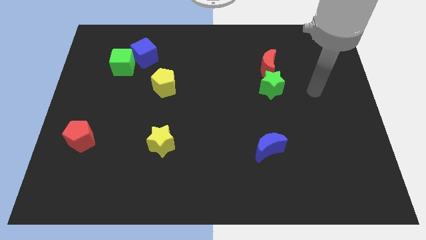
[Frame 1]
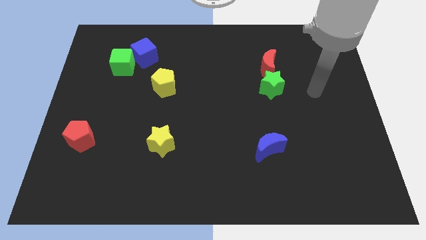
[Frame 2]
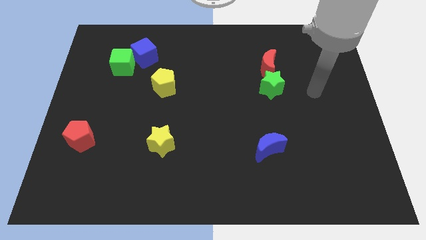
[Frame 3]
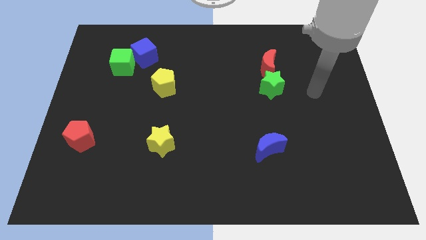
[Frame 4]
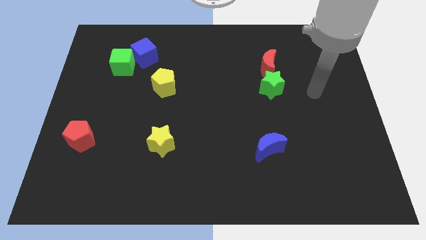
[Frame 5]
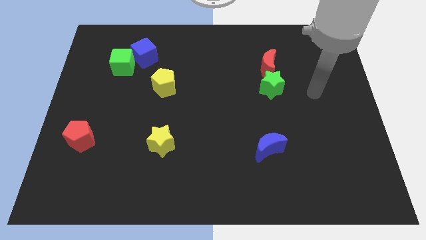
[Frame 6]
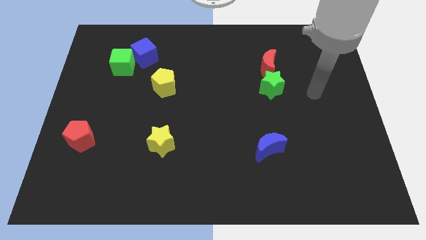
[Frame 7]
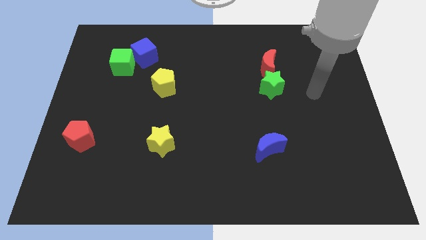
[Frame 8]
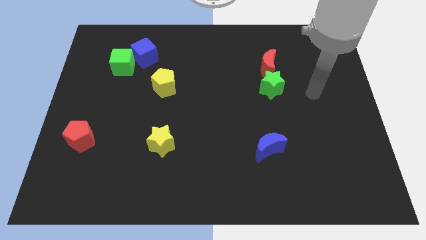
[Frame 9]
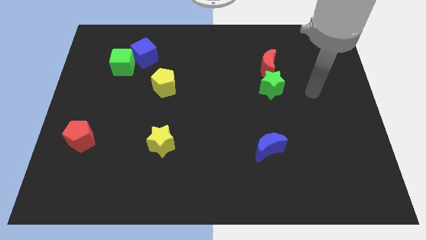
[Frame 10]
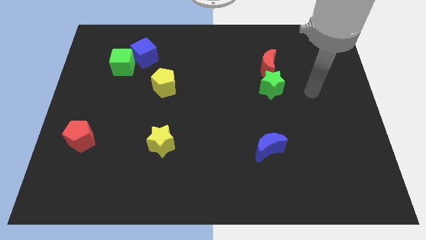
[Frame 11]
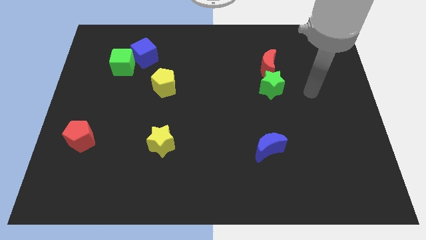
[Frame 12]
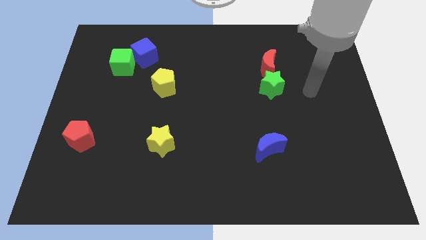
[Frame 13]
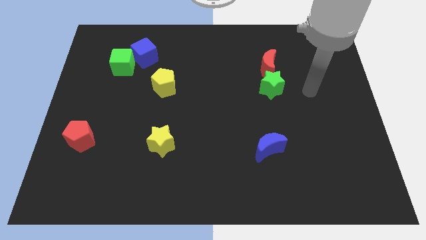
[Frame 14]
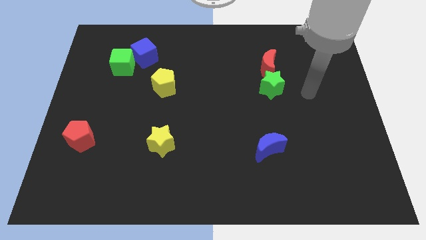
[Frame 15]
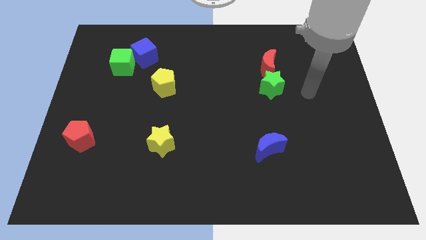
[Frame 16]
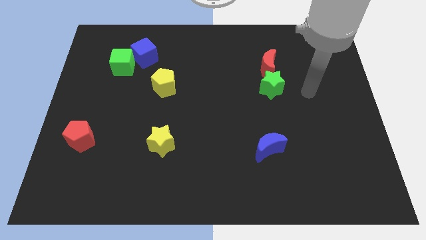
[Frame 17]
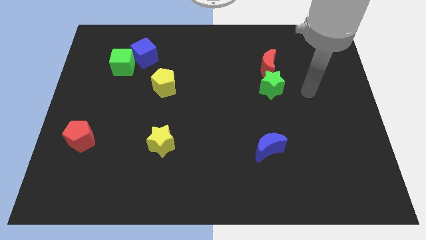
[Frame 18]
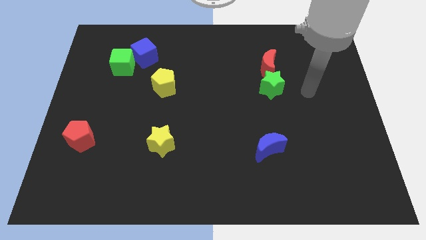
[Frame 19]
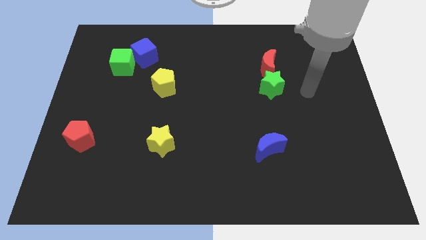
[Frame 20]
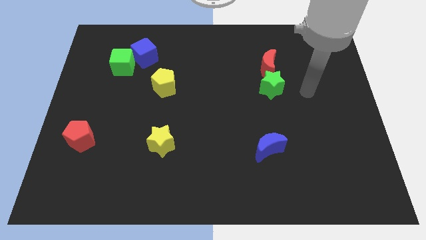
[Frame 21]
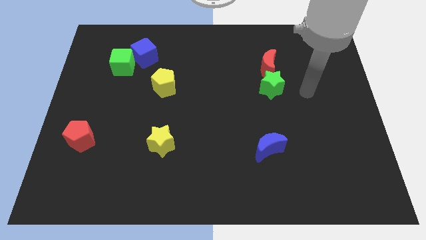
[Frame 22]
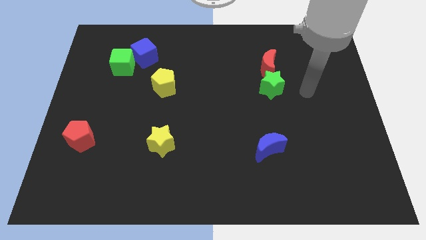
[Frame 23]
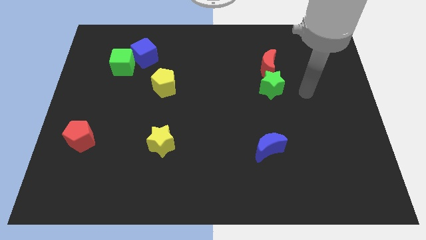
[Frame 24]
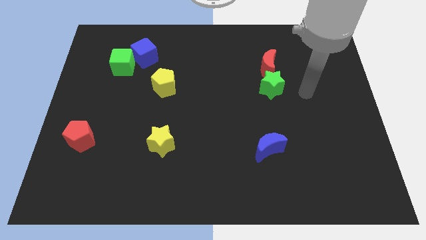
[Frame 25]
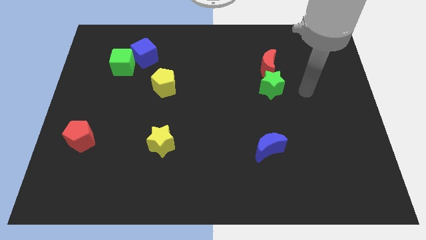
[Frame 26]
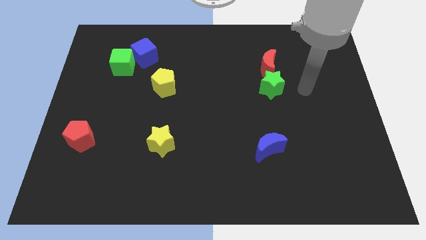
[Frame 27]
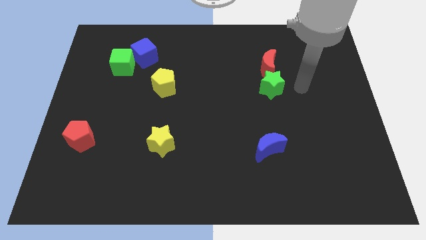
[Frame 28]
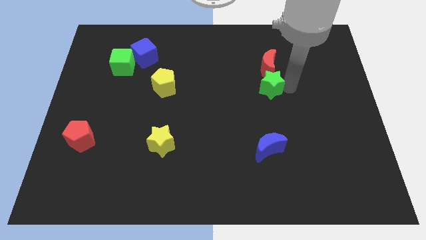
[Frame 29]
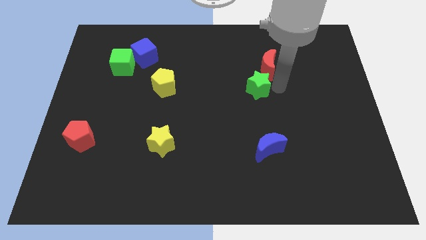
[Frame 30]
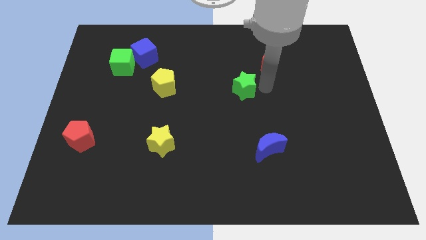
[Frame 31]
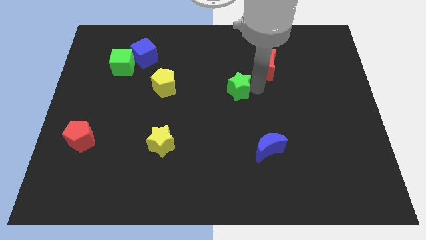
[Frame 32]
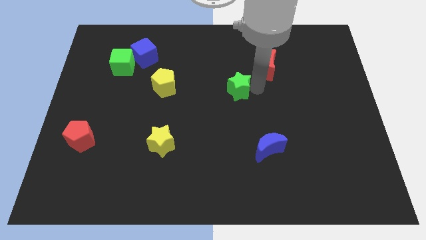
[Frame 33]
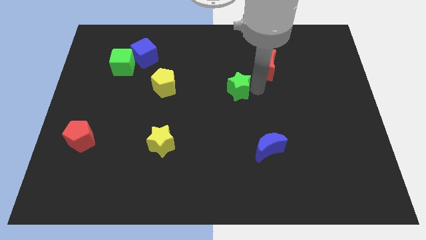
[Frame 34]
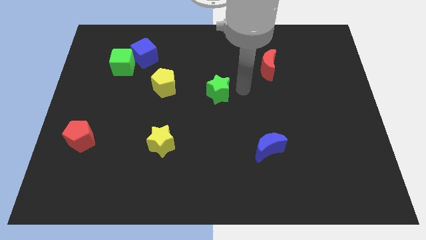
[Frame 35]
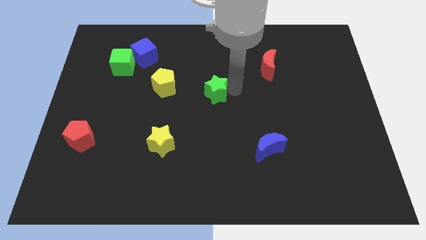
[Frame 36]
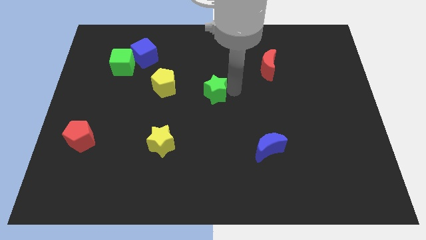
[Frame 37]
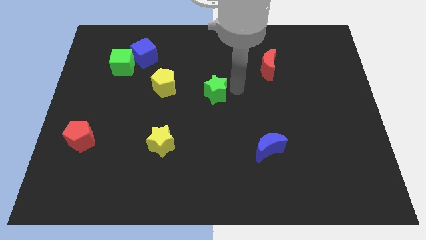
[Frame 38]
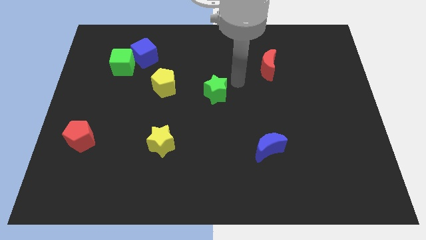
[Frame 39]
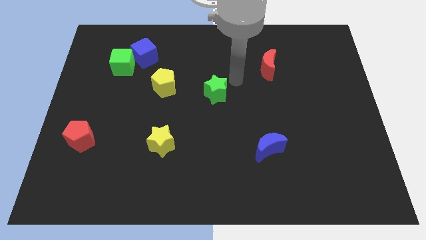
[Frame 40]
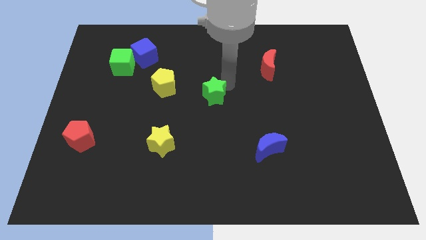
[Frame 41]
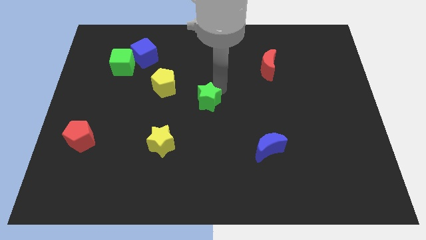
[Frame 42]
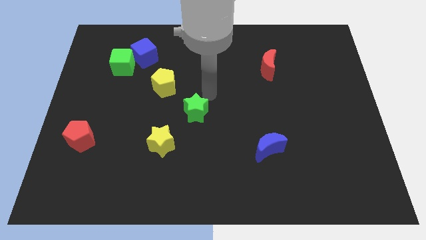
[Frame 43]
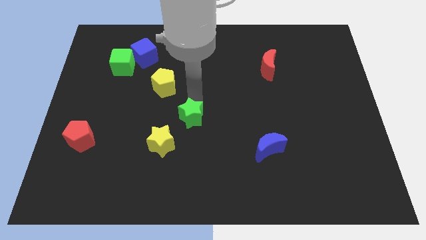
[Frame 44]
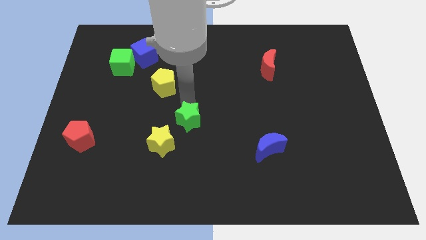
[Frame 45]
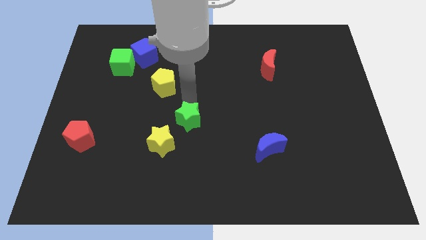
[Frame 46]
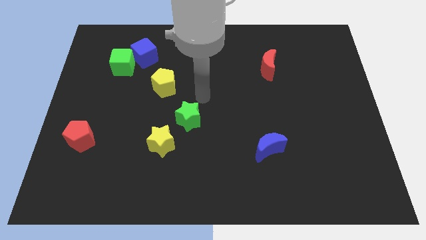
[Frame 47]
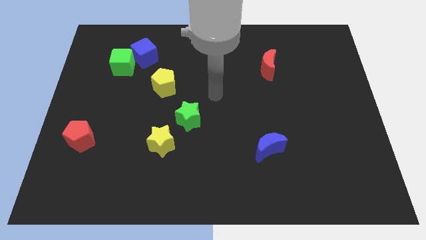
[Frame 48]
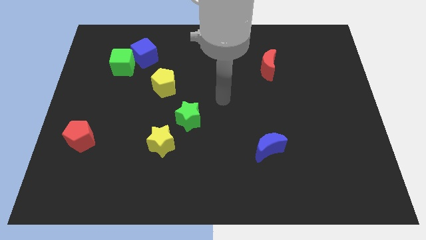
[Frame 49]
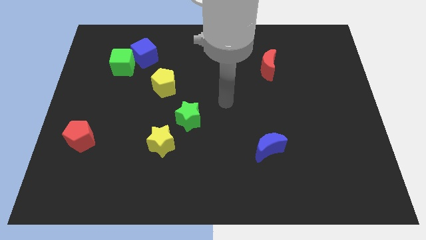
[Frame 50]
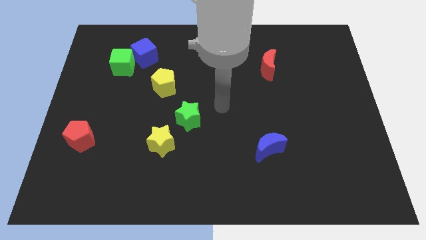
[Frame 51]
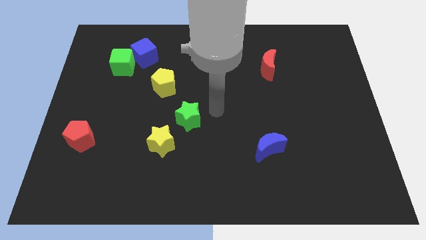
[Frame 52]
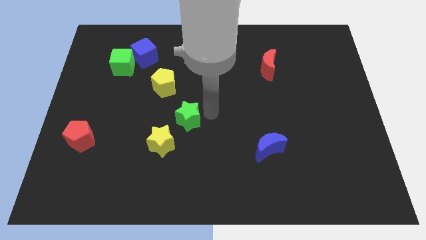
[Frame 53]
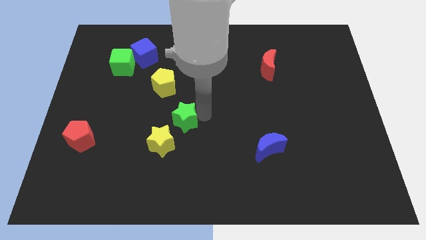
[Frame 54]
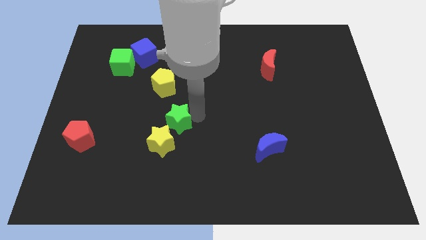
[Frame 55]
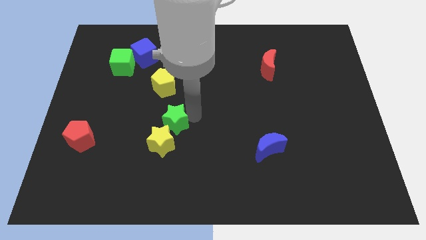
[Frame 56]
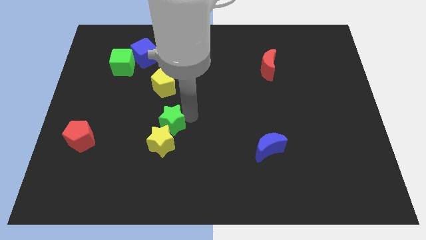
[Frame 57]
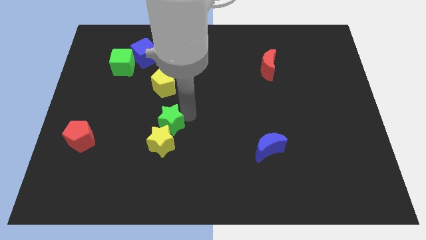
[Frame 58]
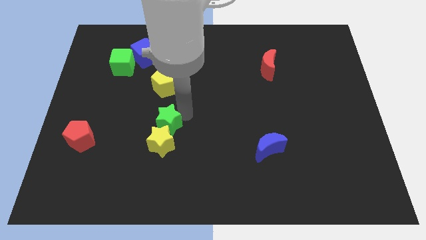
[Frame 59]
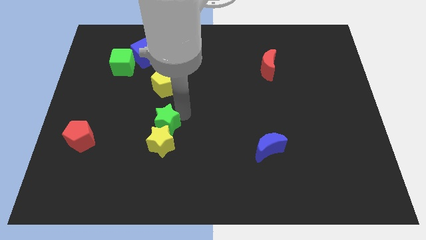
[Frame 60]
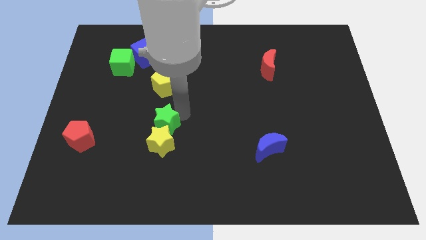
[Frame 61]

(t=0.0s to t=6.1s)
push the green star to the top of the yellow star

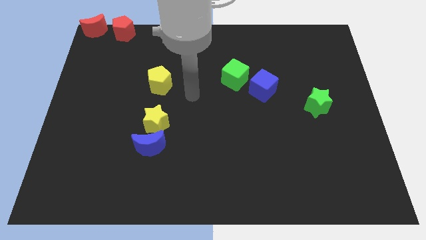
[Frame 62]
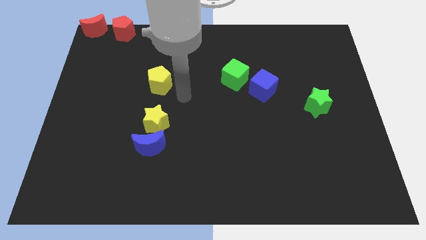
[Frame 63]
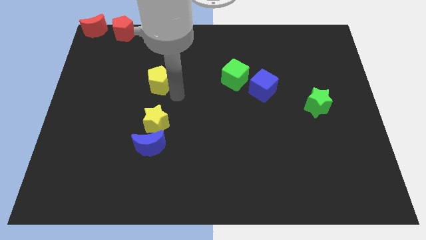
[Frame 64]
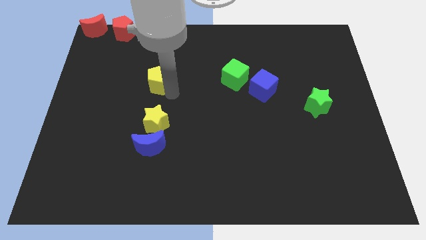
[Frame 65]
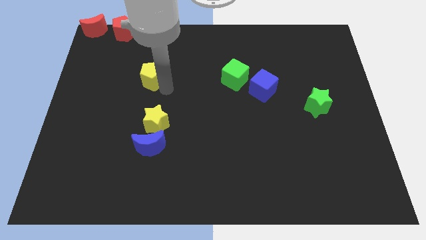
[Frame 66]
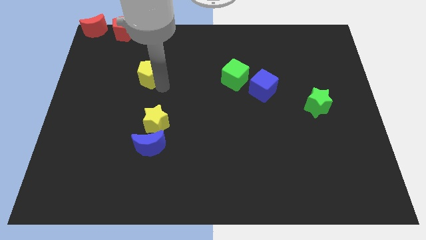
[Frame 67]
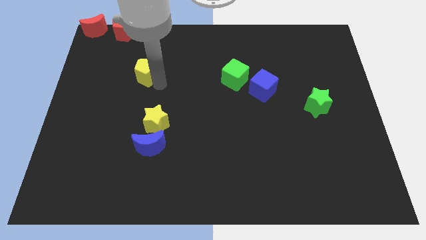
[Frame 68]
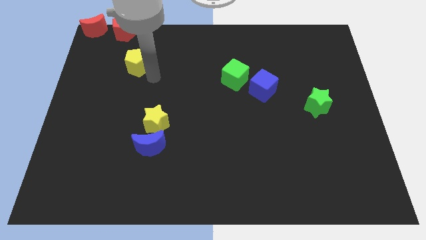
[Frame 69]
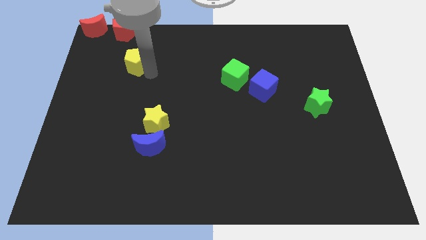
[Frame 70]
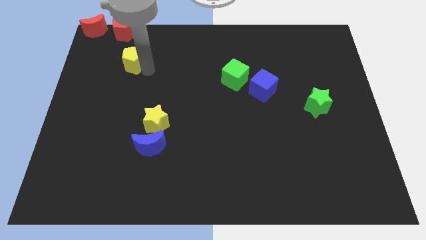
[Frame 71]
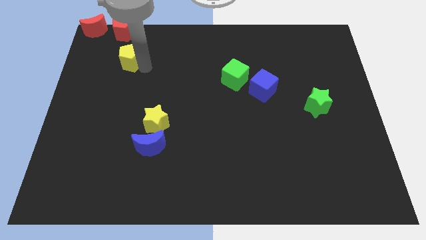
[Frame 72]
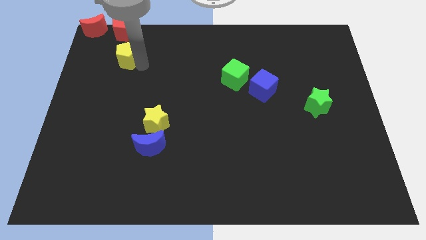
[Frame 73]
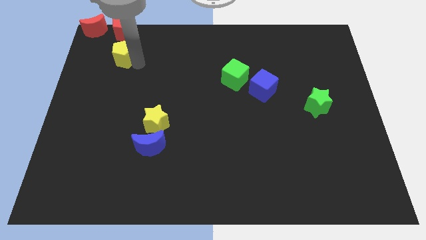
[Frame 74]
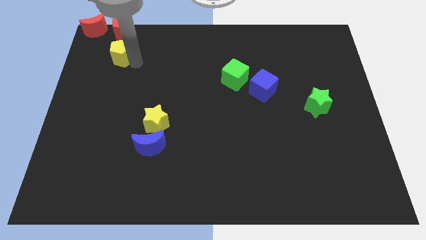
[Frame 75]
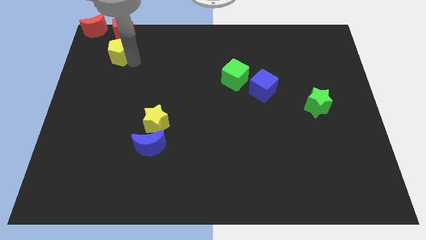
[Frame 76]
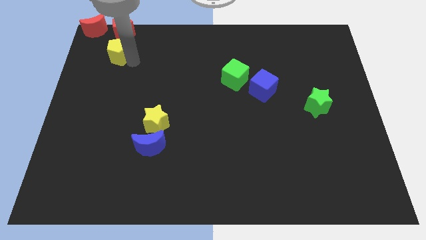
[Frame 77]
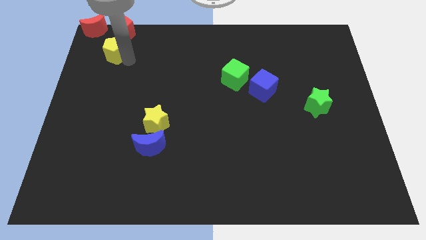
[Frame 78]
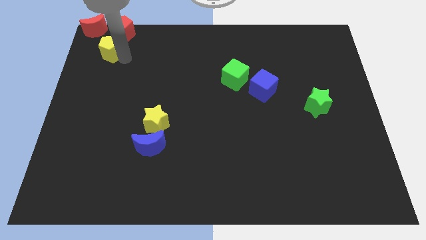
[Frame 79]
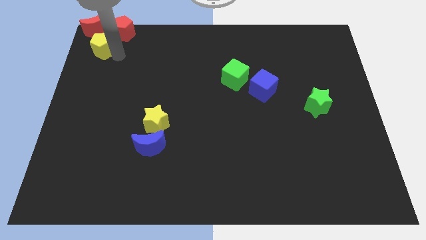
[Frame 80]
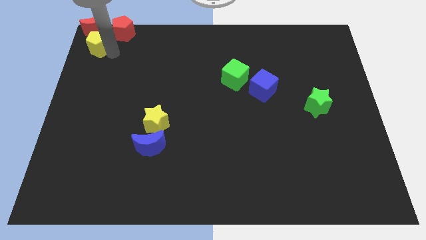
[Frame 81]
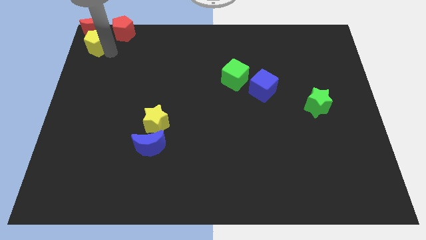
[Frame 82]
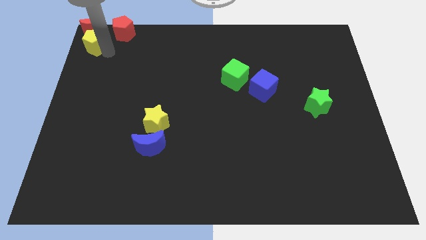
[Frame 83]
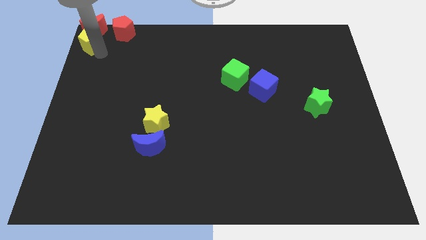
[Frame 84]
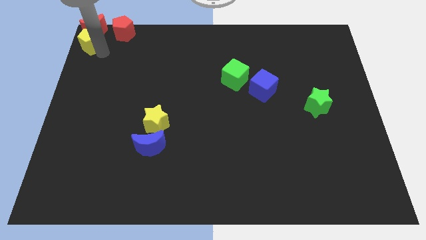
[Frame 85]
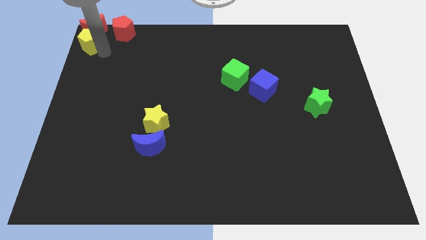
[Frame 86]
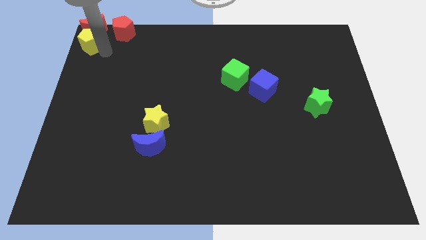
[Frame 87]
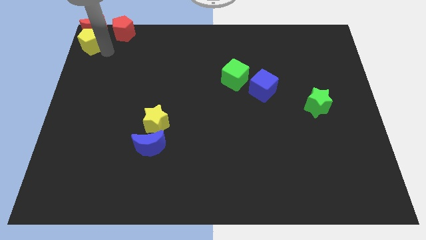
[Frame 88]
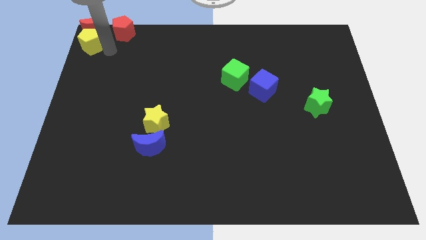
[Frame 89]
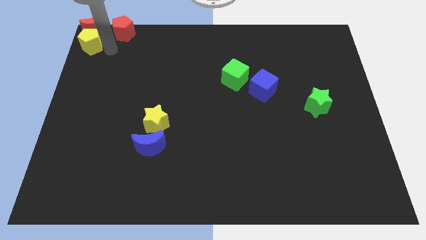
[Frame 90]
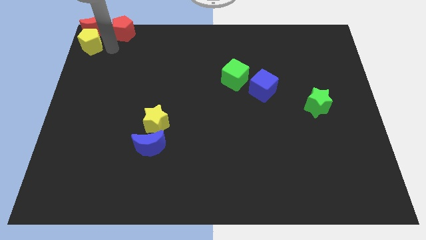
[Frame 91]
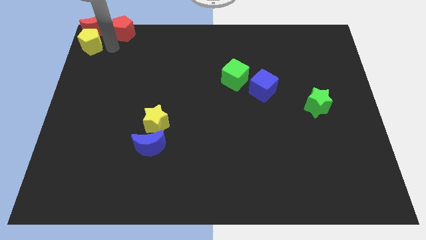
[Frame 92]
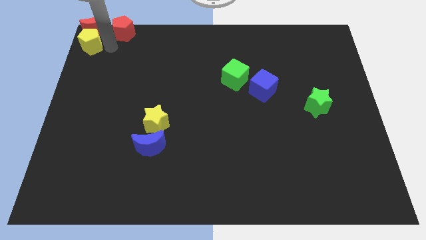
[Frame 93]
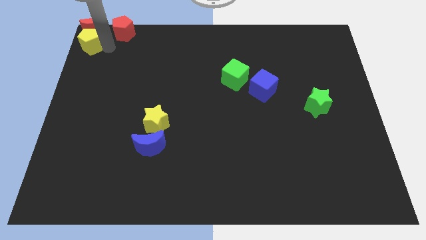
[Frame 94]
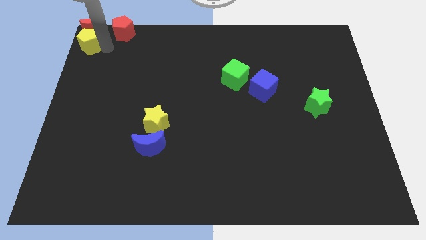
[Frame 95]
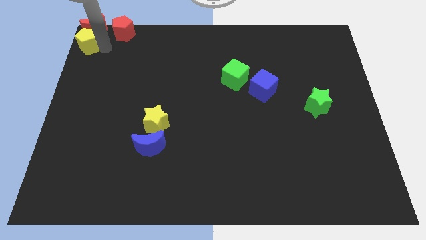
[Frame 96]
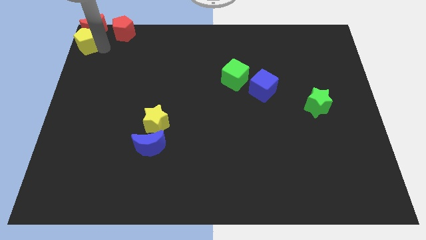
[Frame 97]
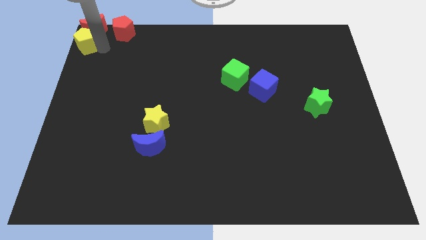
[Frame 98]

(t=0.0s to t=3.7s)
move the yellow pentagon down to red moon
